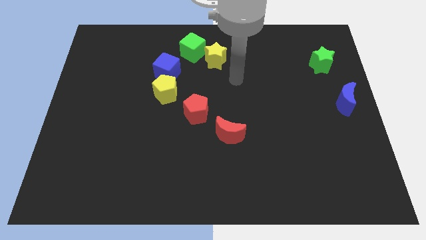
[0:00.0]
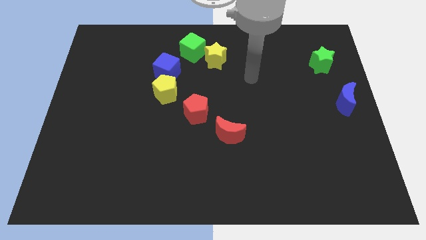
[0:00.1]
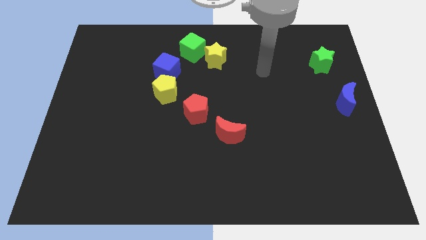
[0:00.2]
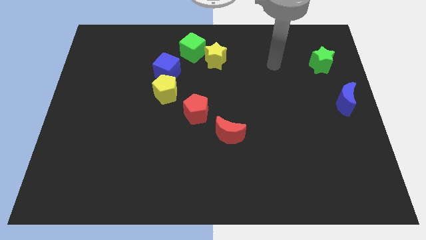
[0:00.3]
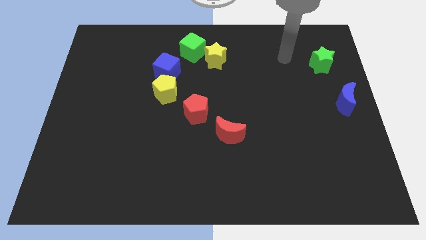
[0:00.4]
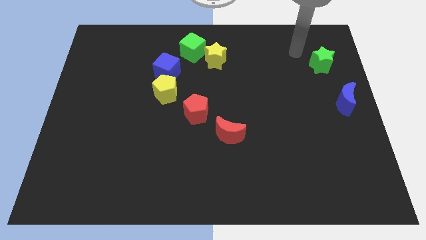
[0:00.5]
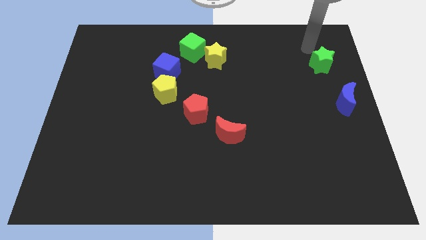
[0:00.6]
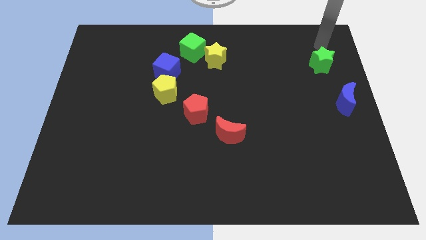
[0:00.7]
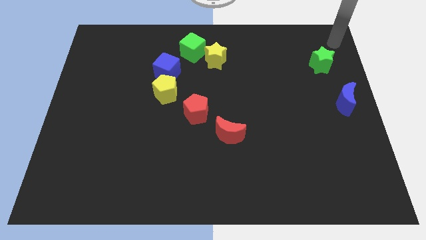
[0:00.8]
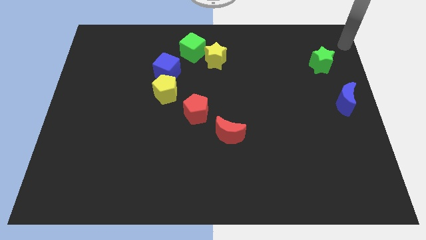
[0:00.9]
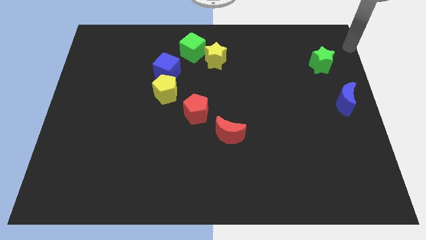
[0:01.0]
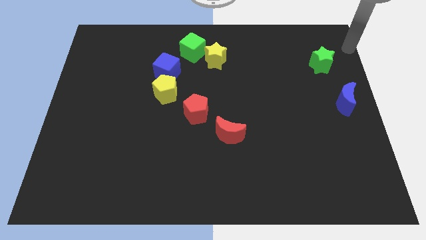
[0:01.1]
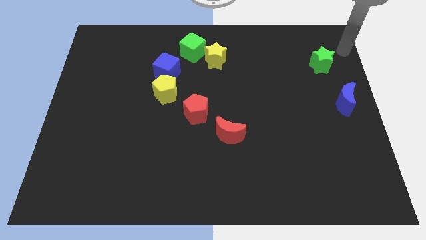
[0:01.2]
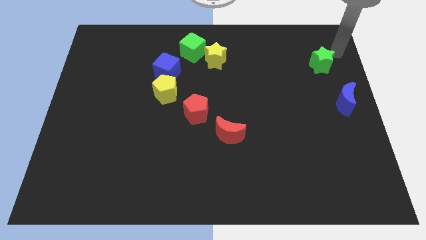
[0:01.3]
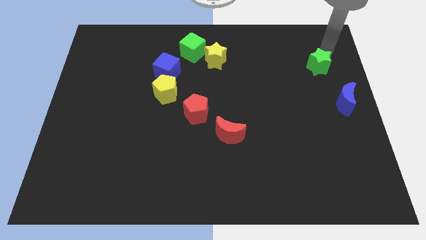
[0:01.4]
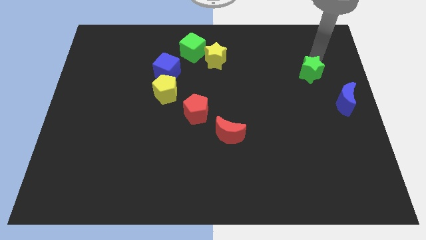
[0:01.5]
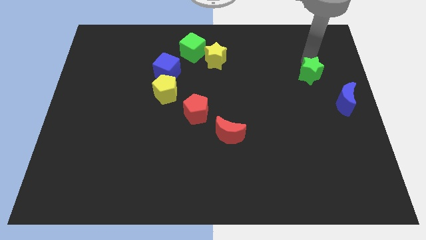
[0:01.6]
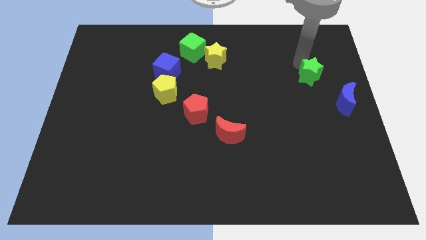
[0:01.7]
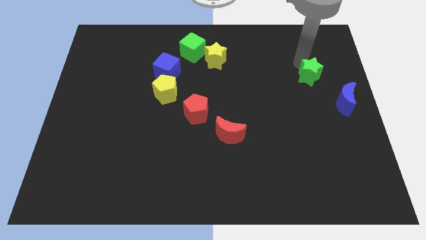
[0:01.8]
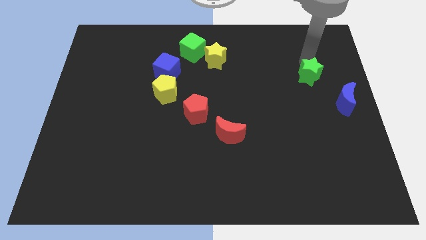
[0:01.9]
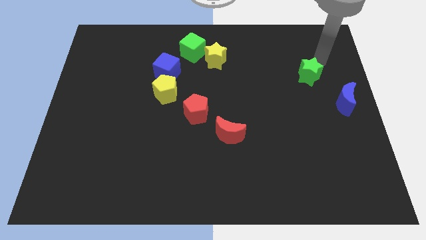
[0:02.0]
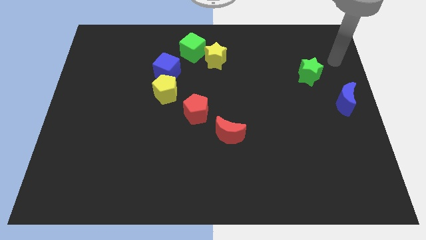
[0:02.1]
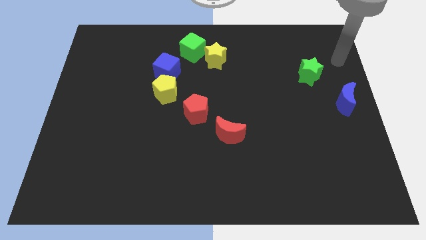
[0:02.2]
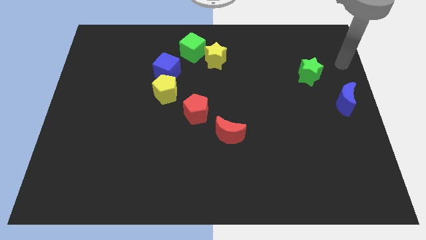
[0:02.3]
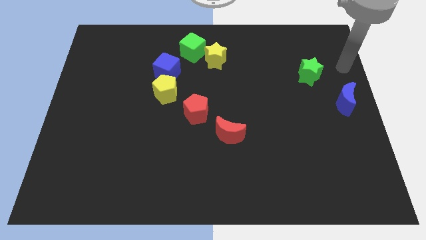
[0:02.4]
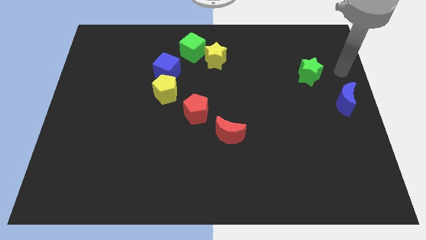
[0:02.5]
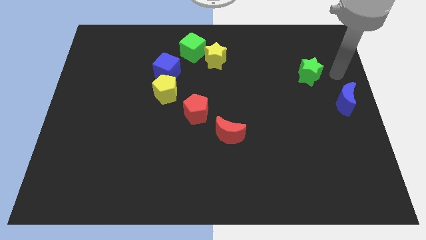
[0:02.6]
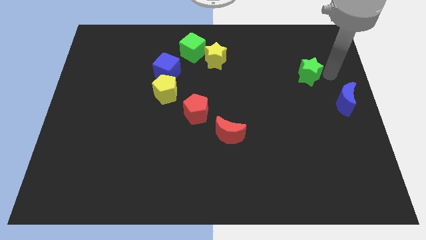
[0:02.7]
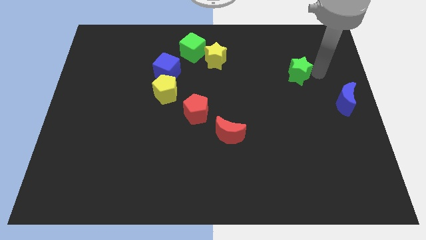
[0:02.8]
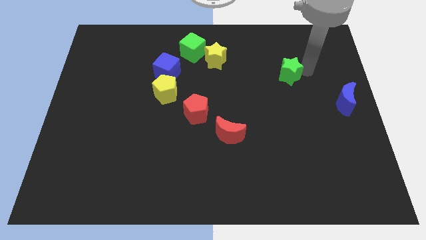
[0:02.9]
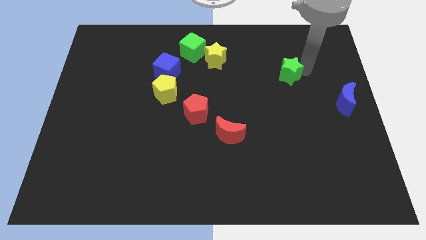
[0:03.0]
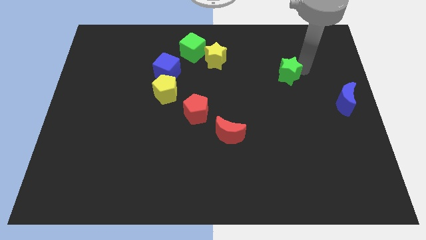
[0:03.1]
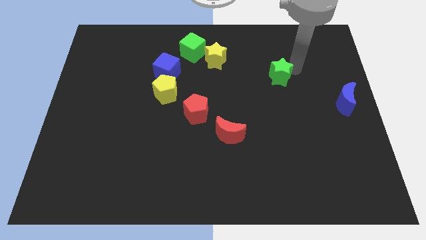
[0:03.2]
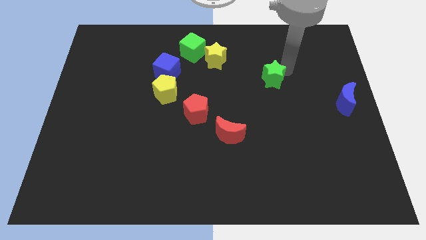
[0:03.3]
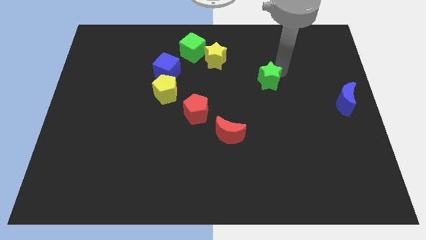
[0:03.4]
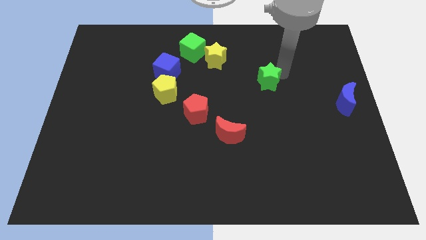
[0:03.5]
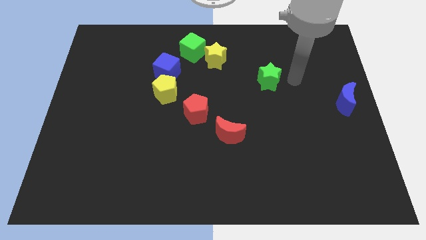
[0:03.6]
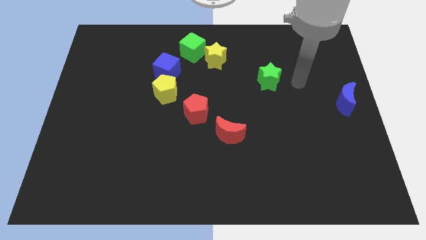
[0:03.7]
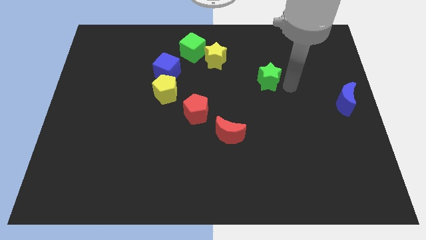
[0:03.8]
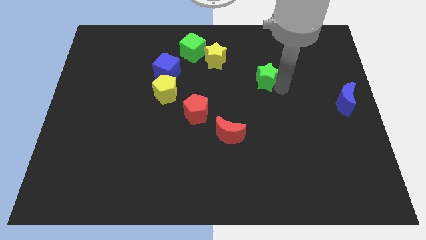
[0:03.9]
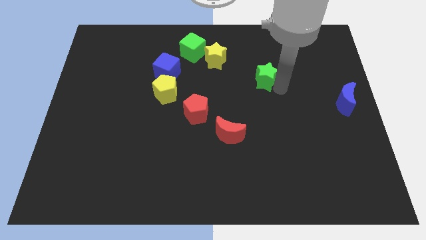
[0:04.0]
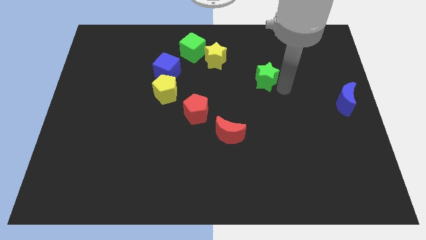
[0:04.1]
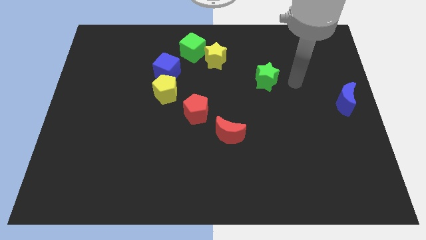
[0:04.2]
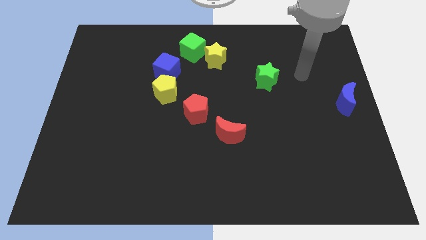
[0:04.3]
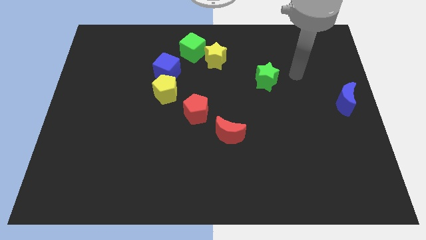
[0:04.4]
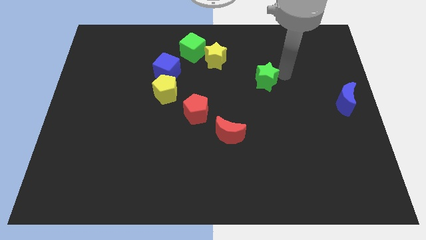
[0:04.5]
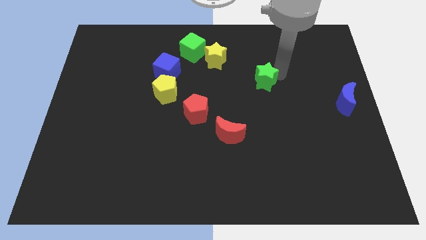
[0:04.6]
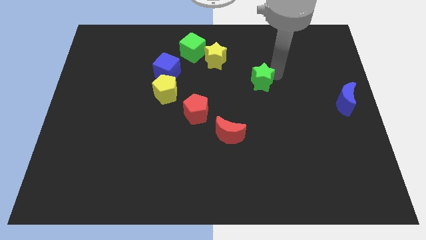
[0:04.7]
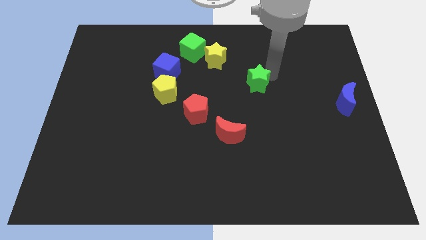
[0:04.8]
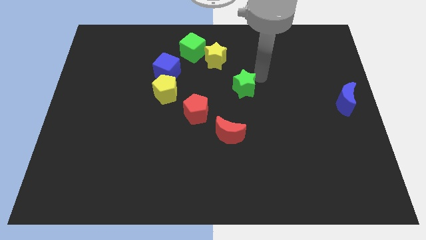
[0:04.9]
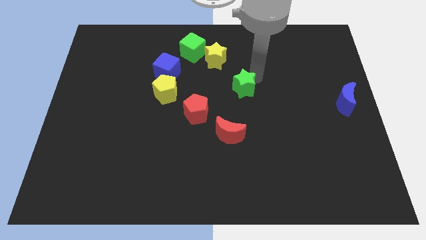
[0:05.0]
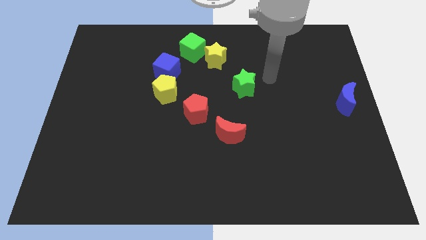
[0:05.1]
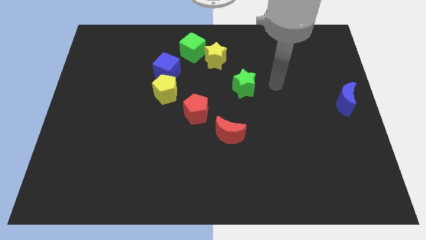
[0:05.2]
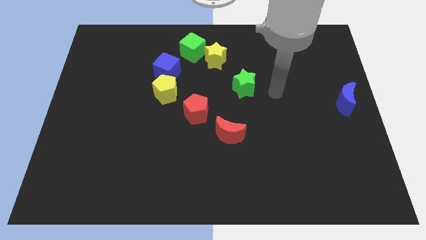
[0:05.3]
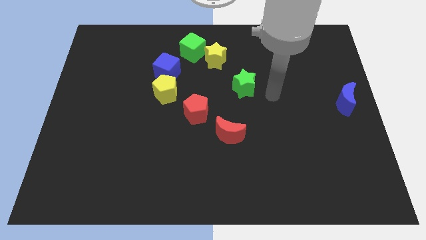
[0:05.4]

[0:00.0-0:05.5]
push the green star to the center of the board

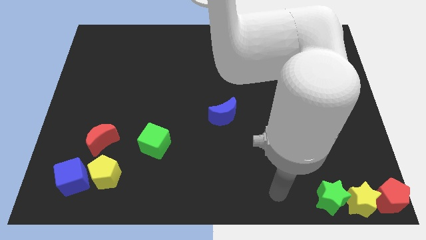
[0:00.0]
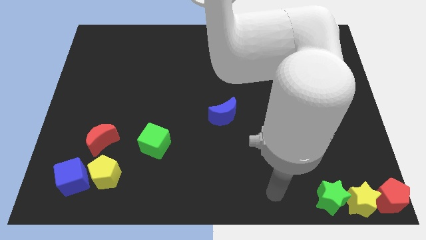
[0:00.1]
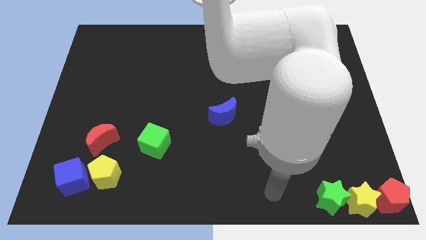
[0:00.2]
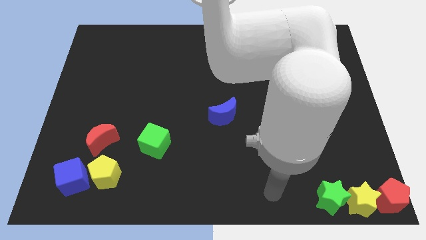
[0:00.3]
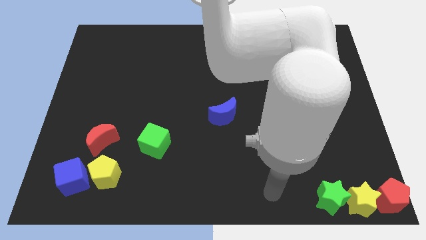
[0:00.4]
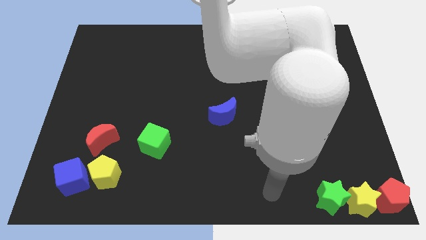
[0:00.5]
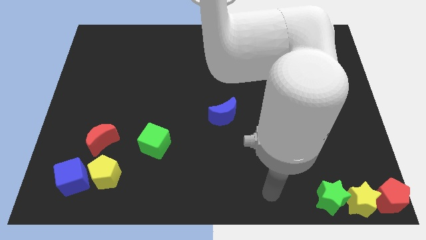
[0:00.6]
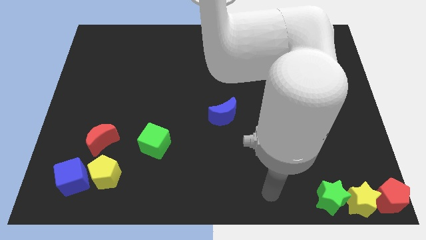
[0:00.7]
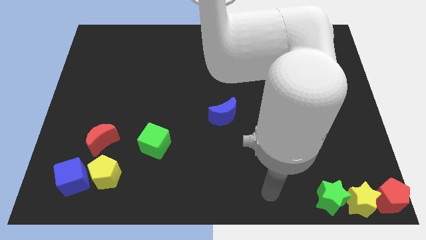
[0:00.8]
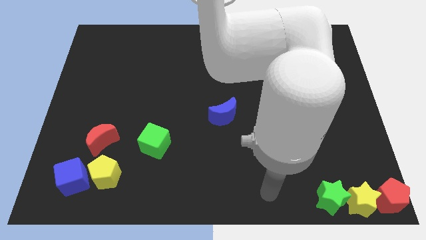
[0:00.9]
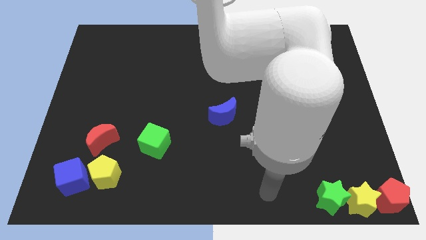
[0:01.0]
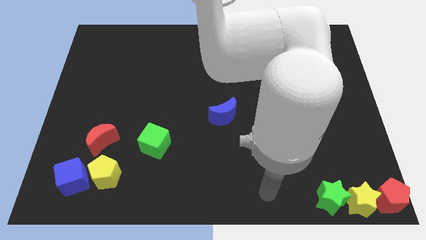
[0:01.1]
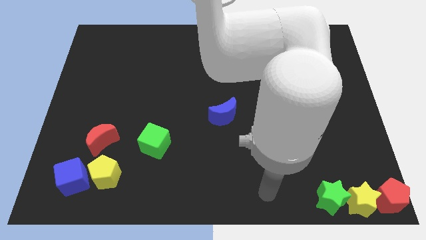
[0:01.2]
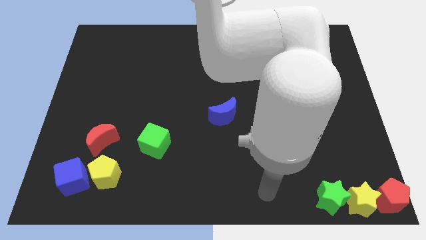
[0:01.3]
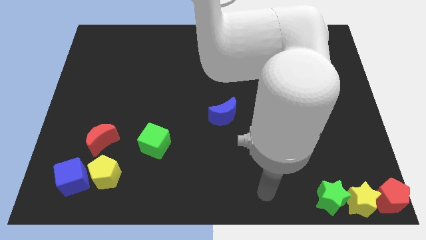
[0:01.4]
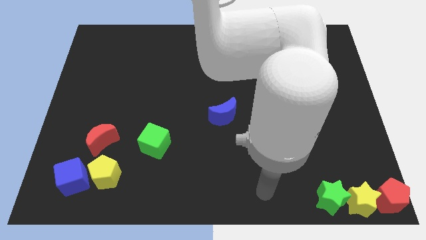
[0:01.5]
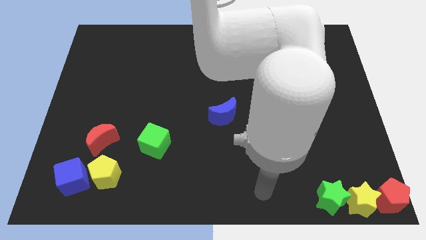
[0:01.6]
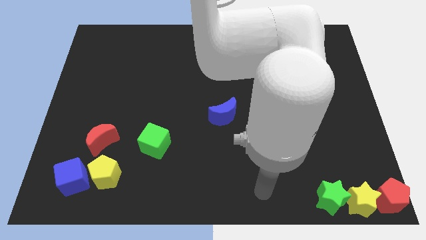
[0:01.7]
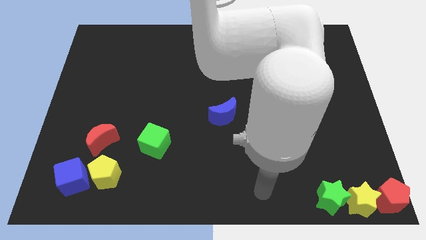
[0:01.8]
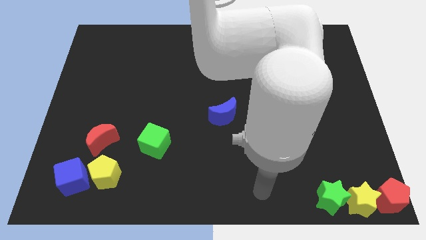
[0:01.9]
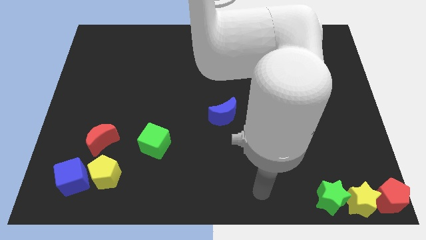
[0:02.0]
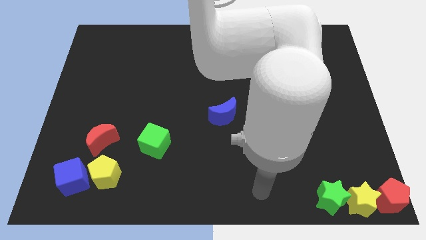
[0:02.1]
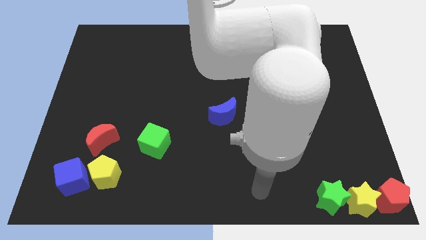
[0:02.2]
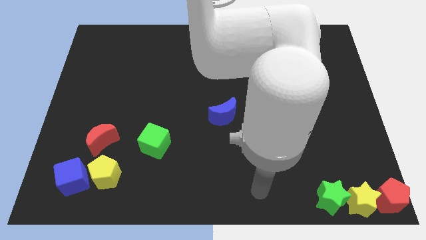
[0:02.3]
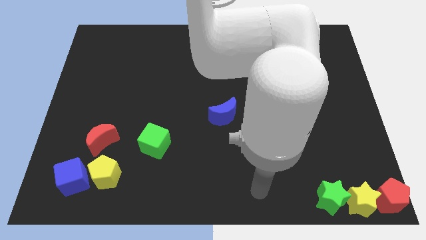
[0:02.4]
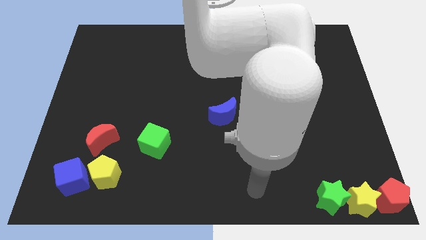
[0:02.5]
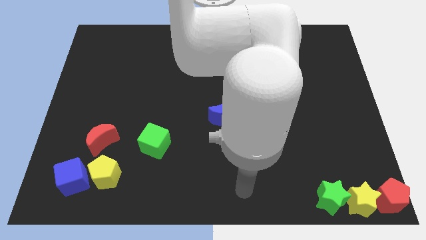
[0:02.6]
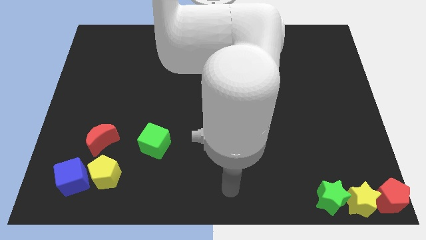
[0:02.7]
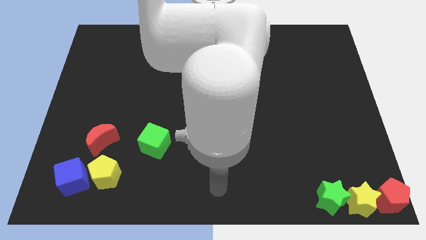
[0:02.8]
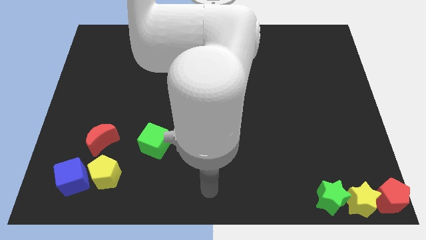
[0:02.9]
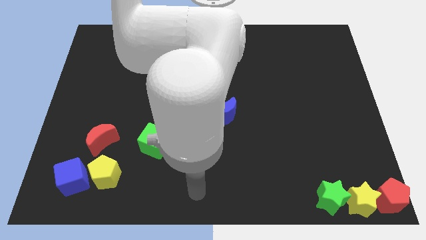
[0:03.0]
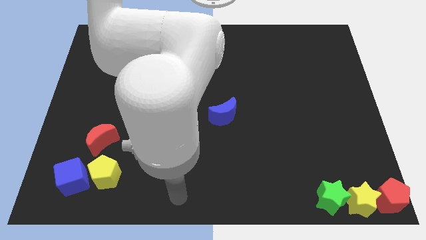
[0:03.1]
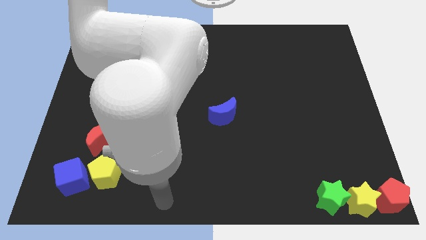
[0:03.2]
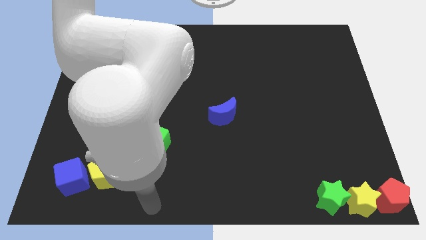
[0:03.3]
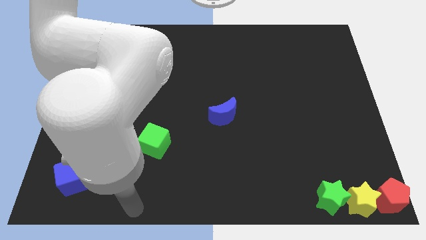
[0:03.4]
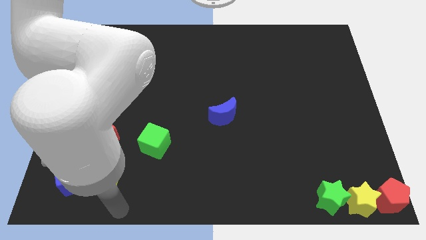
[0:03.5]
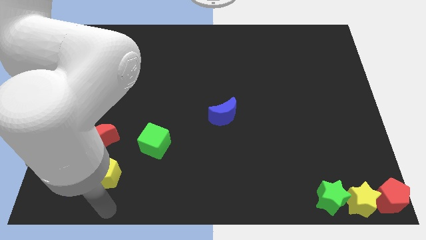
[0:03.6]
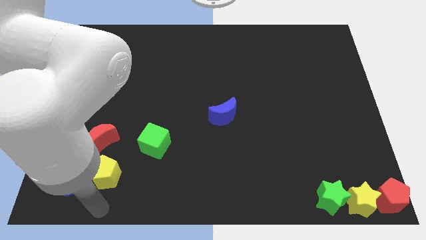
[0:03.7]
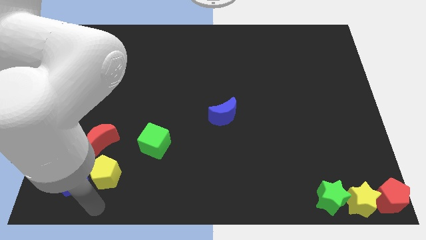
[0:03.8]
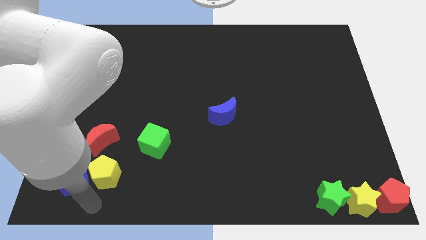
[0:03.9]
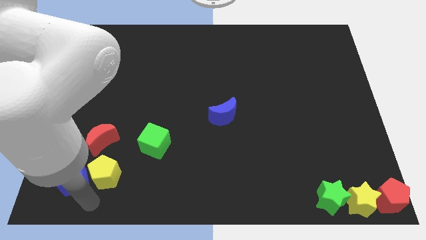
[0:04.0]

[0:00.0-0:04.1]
move your arm towards the blue cube
